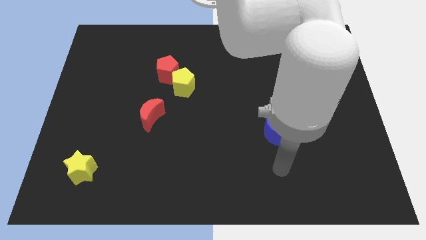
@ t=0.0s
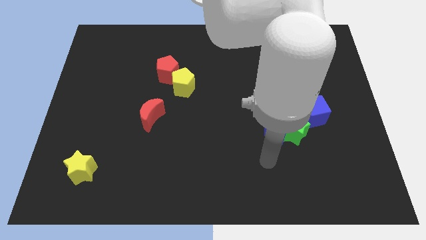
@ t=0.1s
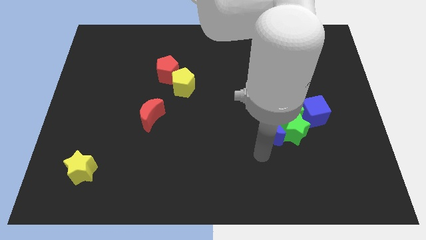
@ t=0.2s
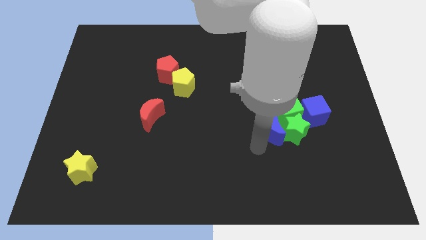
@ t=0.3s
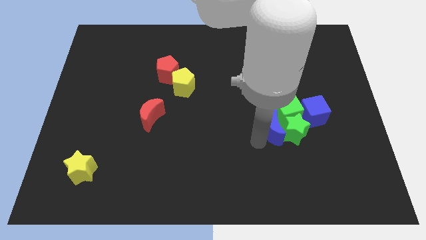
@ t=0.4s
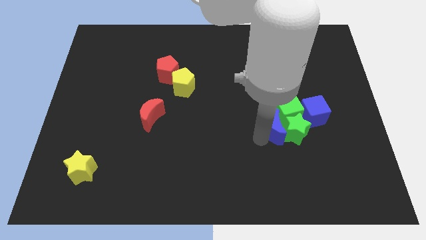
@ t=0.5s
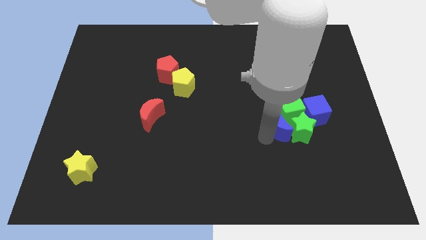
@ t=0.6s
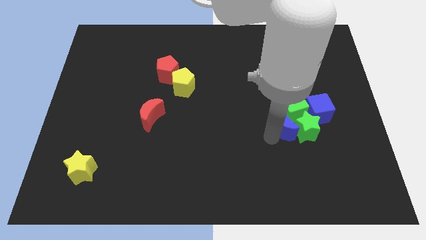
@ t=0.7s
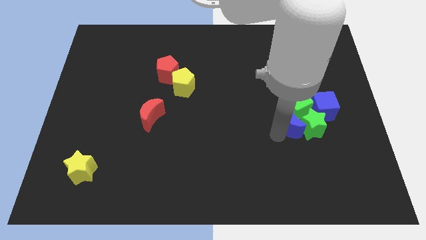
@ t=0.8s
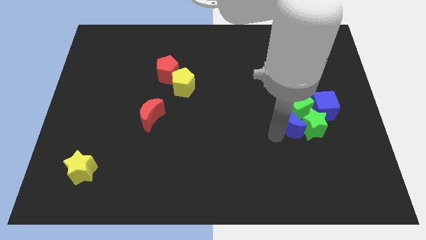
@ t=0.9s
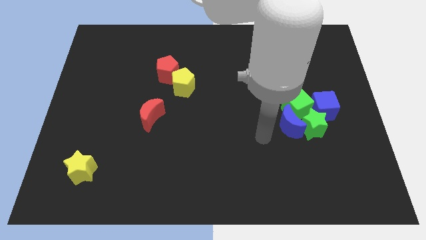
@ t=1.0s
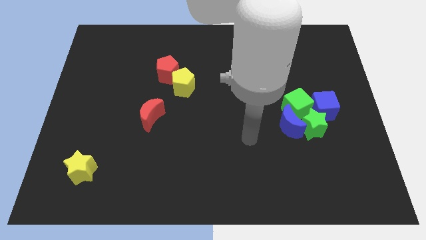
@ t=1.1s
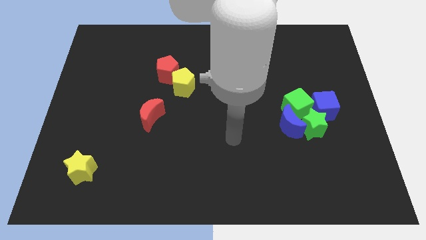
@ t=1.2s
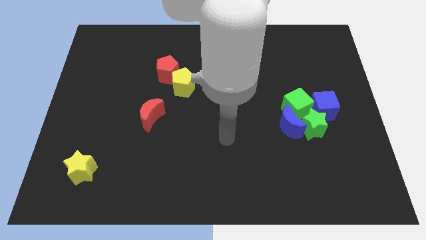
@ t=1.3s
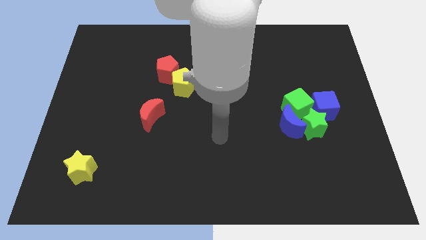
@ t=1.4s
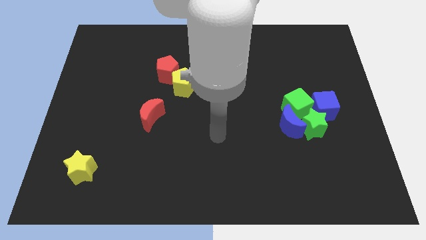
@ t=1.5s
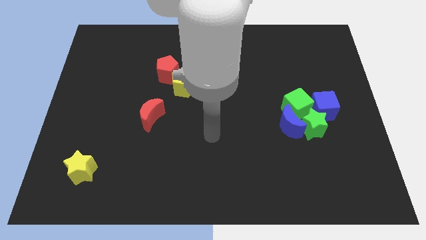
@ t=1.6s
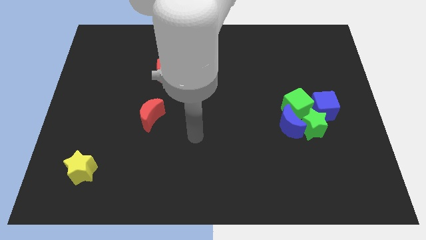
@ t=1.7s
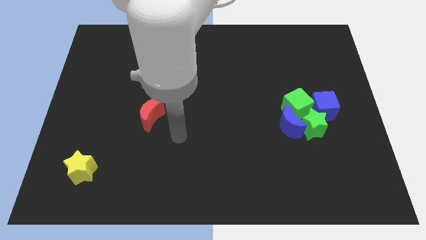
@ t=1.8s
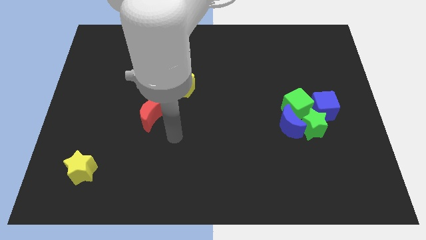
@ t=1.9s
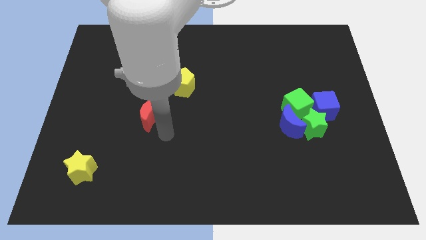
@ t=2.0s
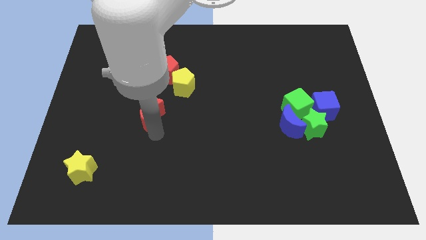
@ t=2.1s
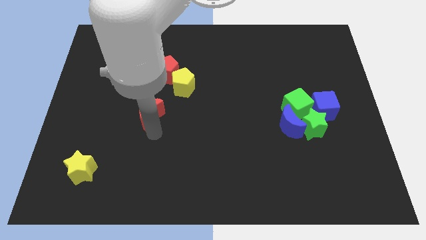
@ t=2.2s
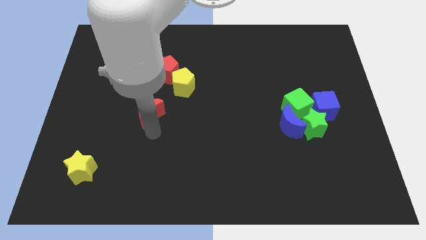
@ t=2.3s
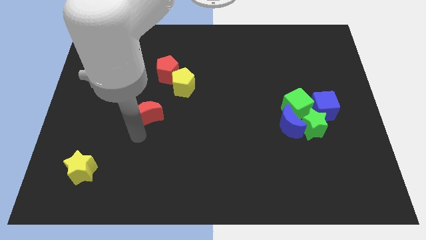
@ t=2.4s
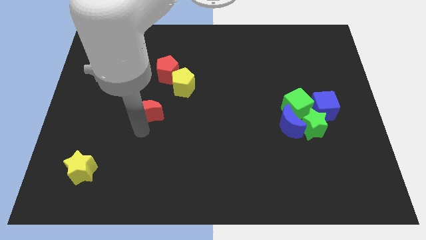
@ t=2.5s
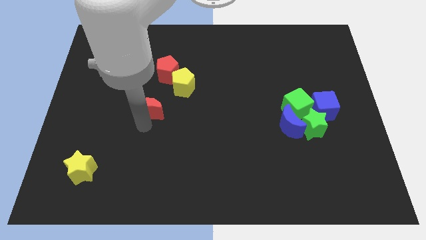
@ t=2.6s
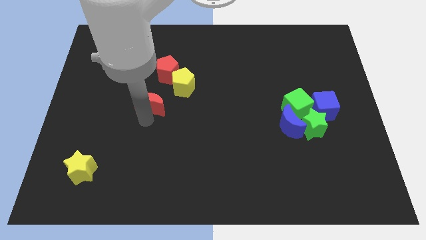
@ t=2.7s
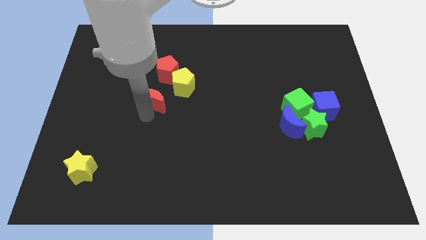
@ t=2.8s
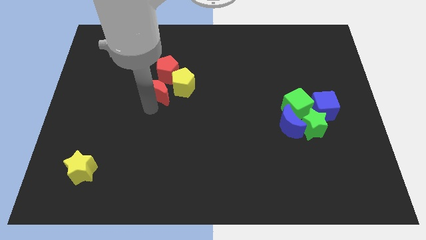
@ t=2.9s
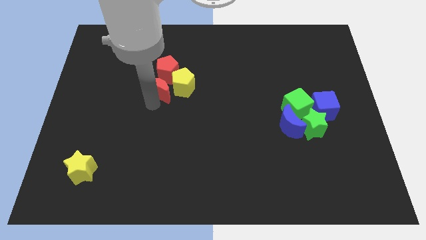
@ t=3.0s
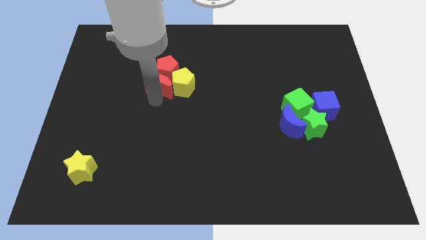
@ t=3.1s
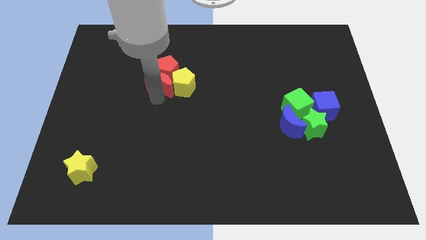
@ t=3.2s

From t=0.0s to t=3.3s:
place red crescent to the bottom of the red pentagon

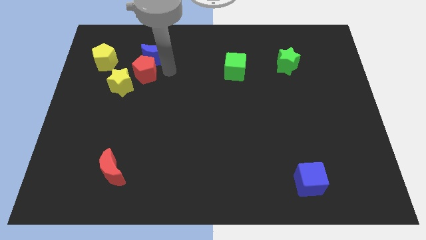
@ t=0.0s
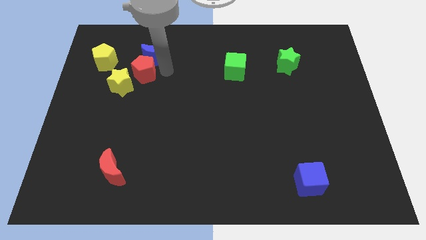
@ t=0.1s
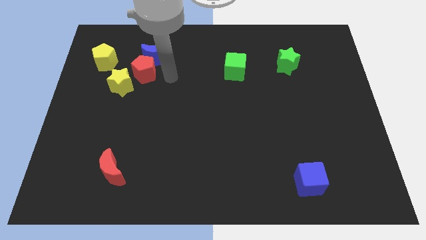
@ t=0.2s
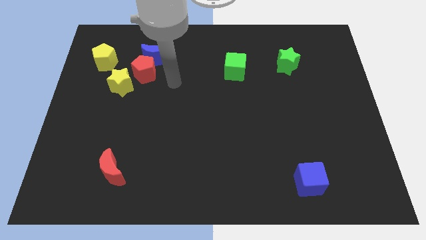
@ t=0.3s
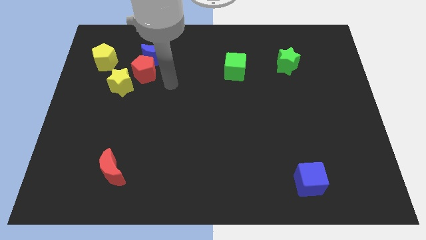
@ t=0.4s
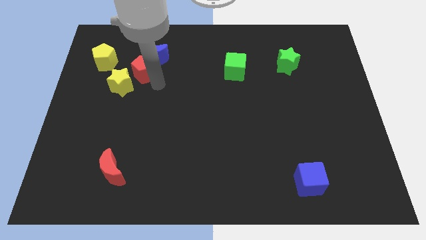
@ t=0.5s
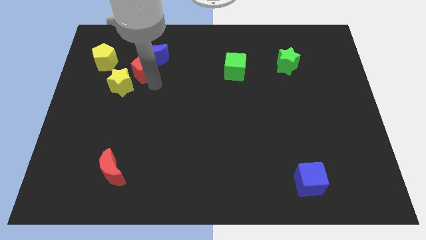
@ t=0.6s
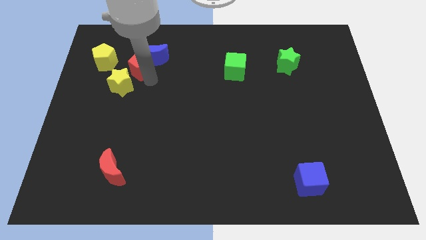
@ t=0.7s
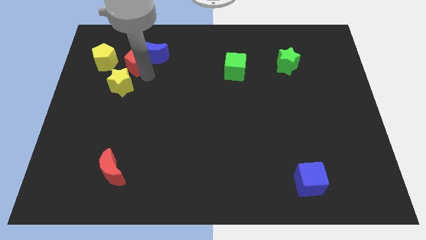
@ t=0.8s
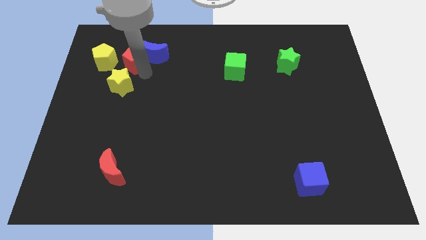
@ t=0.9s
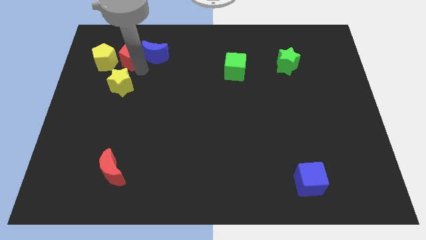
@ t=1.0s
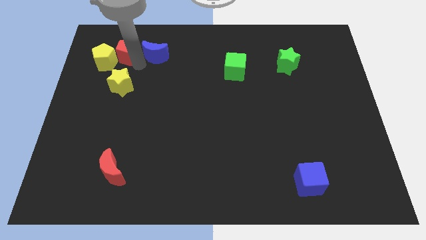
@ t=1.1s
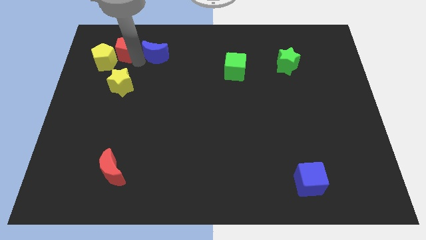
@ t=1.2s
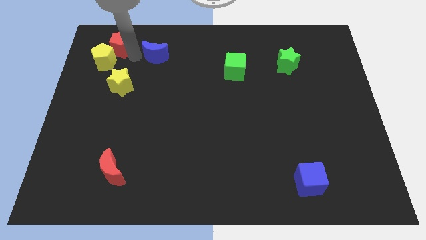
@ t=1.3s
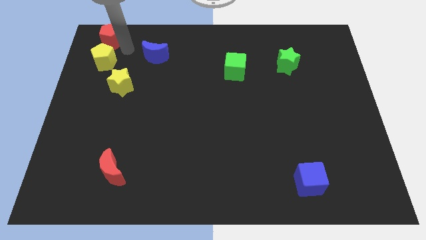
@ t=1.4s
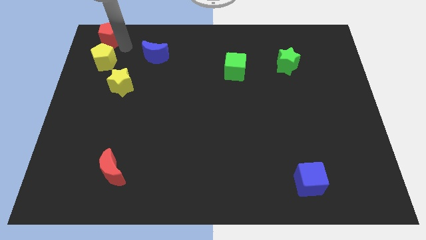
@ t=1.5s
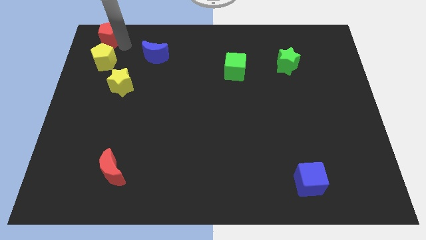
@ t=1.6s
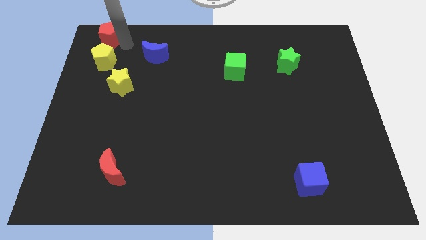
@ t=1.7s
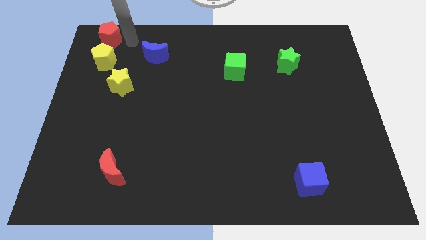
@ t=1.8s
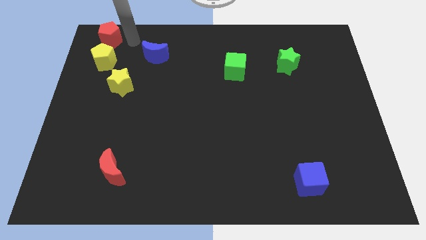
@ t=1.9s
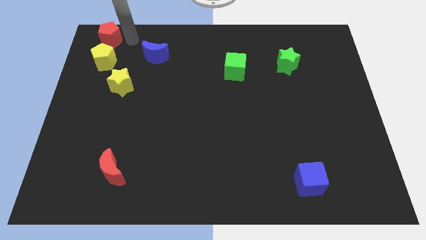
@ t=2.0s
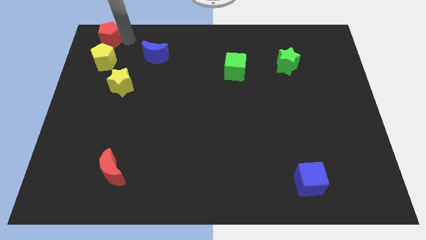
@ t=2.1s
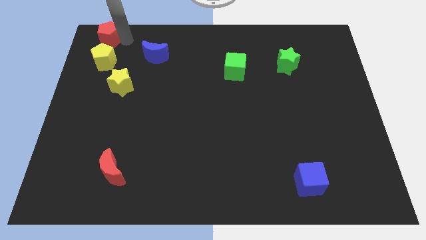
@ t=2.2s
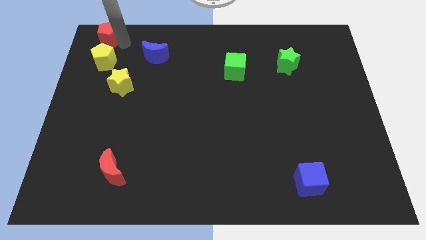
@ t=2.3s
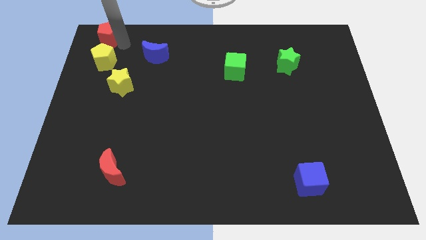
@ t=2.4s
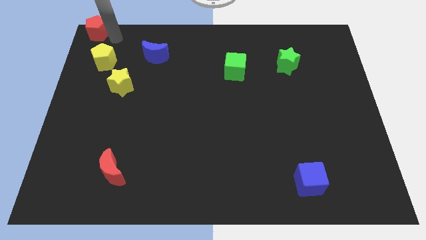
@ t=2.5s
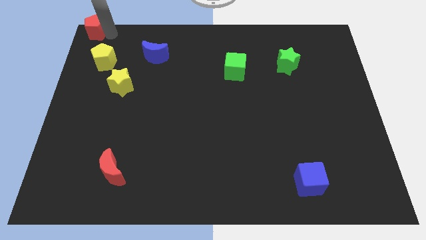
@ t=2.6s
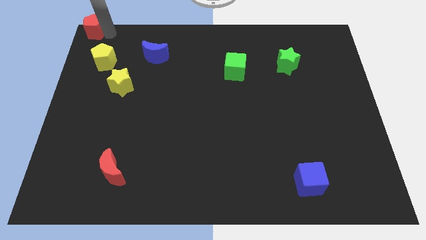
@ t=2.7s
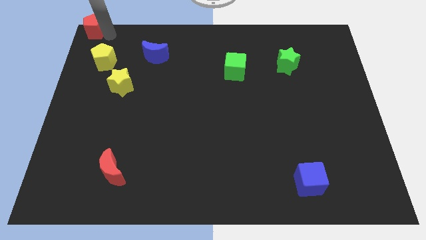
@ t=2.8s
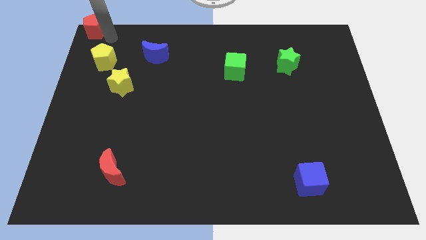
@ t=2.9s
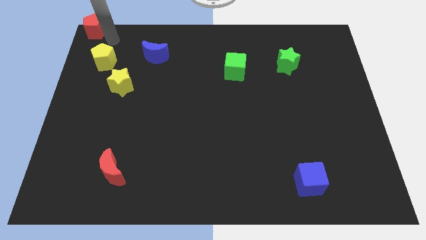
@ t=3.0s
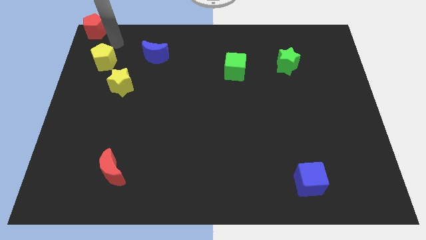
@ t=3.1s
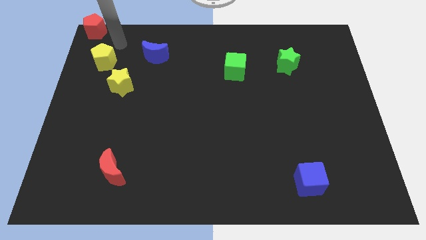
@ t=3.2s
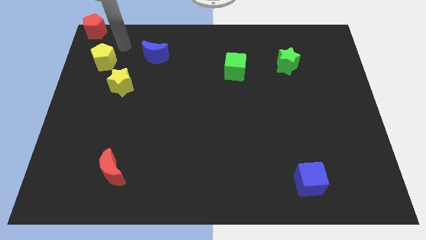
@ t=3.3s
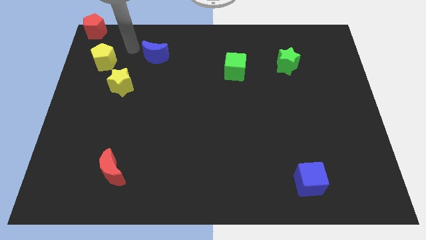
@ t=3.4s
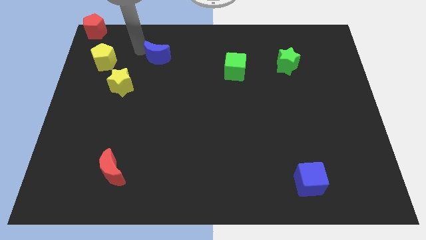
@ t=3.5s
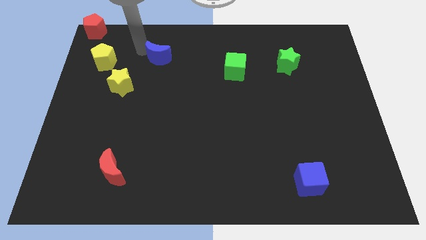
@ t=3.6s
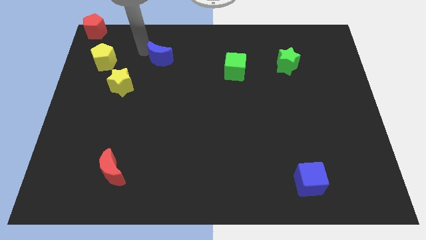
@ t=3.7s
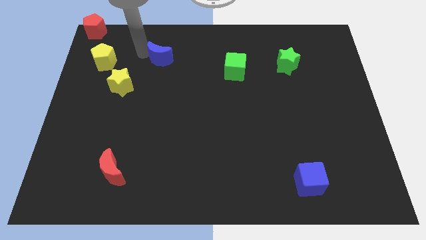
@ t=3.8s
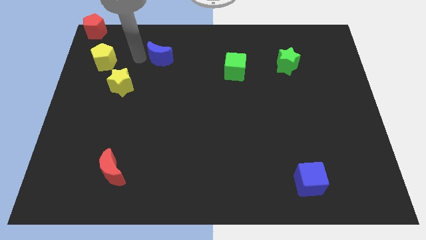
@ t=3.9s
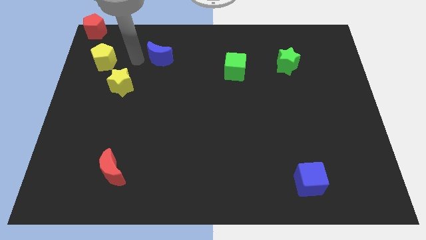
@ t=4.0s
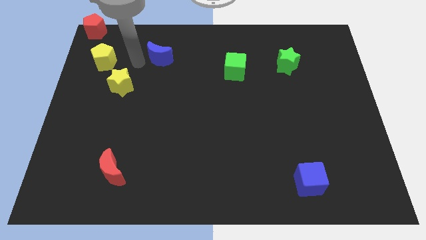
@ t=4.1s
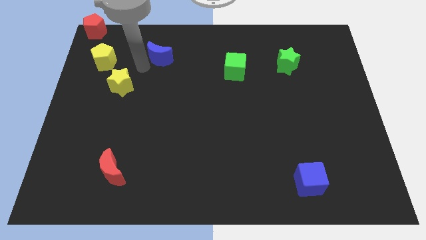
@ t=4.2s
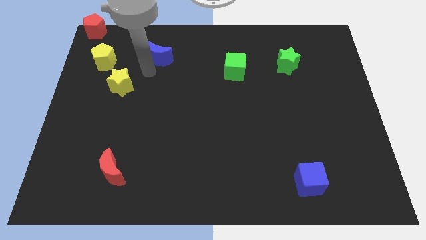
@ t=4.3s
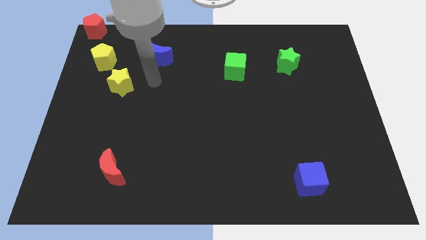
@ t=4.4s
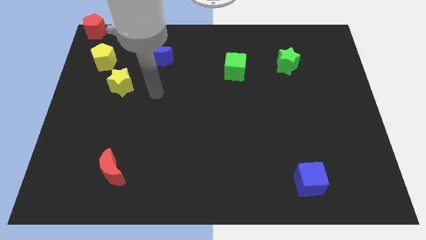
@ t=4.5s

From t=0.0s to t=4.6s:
move the red pentagon towards the top left corner of the board

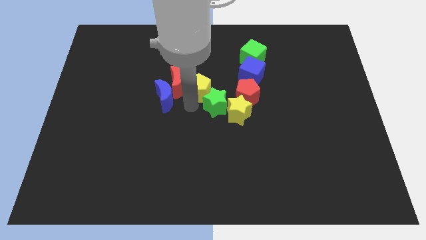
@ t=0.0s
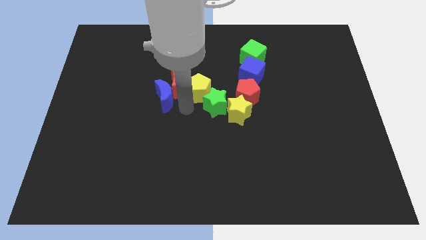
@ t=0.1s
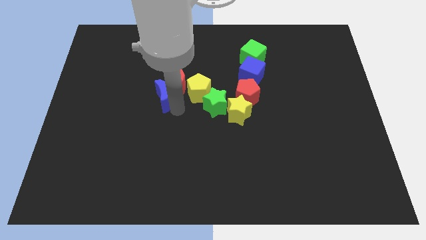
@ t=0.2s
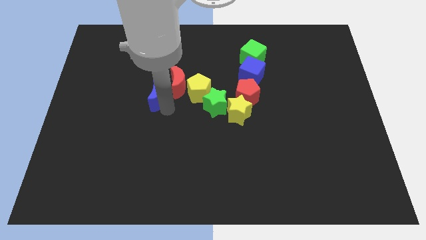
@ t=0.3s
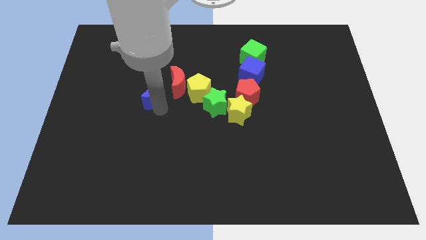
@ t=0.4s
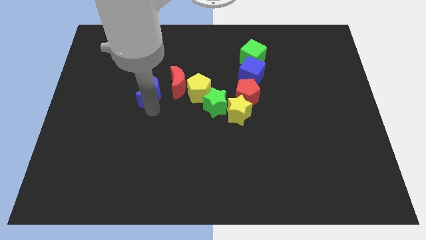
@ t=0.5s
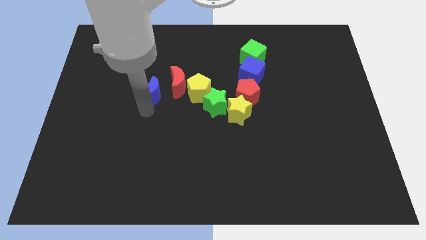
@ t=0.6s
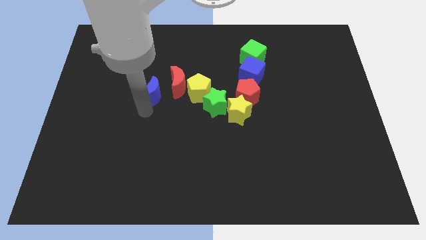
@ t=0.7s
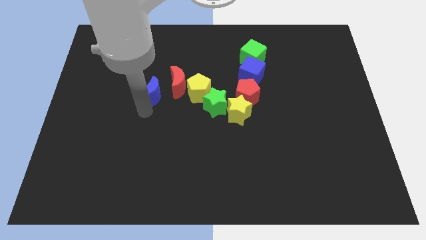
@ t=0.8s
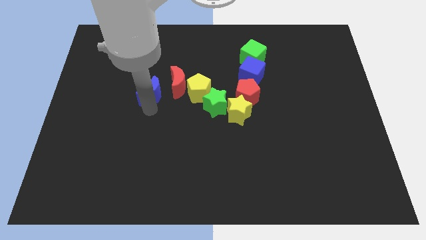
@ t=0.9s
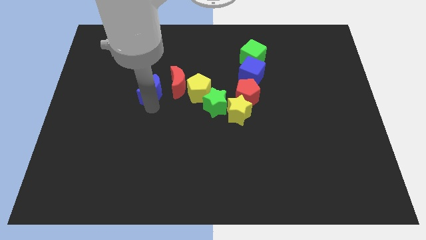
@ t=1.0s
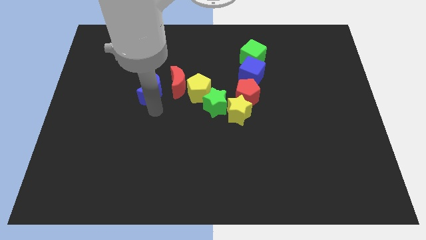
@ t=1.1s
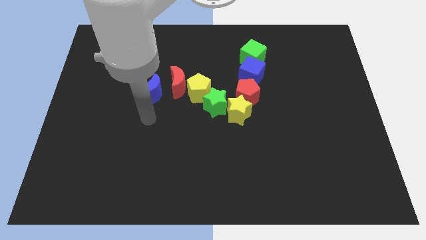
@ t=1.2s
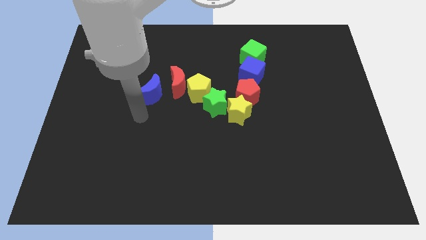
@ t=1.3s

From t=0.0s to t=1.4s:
move the blue moon away from the red moon
